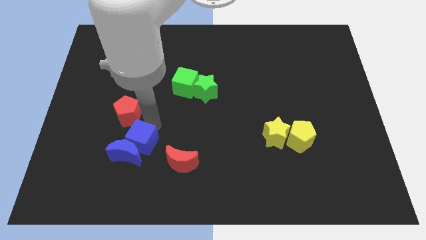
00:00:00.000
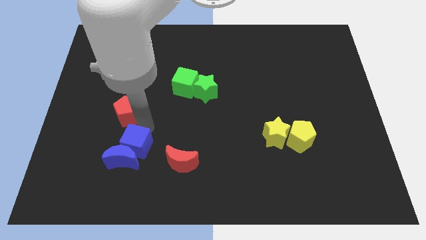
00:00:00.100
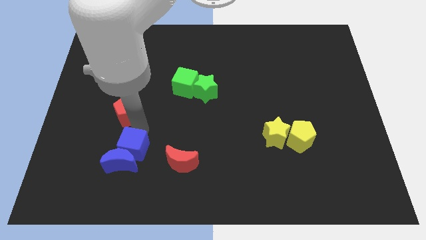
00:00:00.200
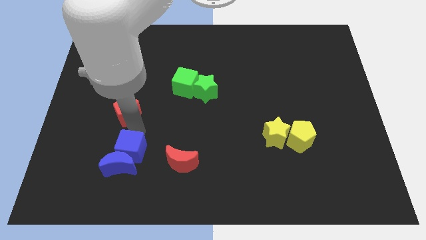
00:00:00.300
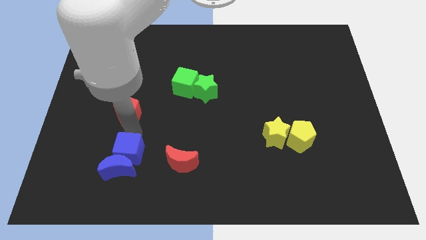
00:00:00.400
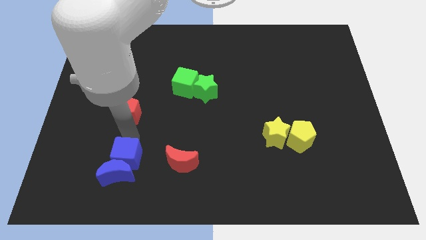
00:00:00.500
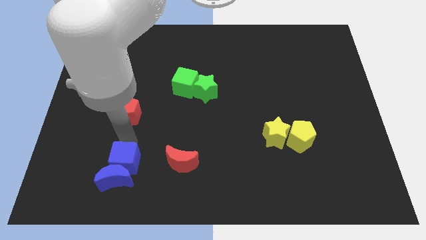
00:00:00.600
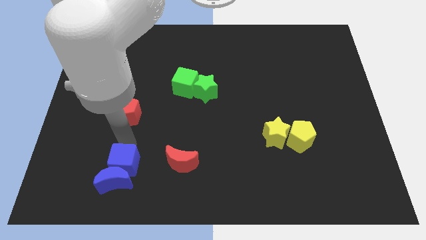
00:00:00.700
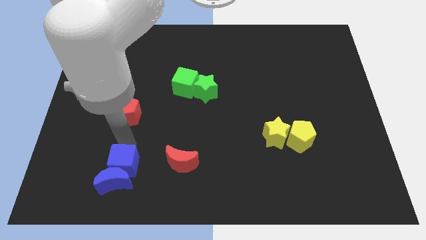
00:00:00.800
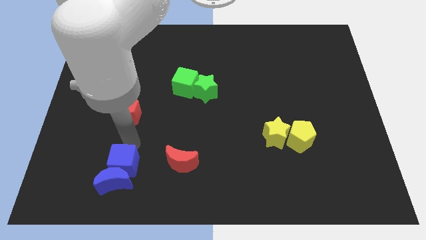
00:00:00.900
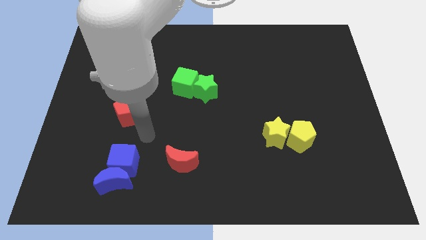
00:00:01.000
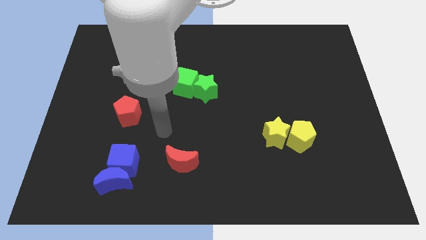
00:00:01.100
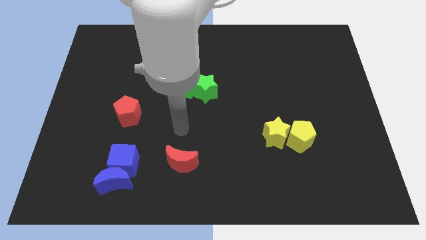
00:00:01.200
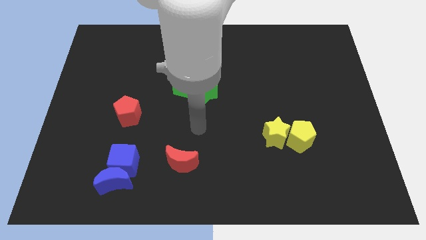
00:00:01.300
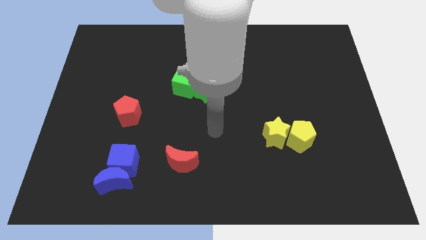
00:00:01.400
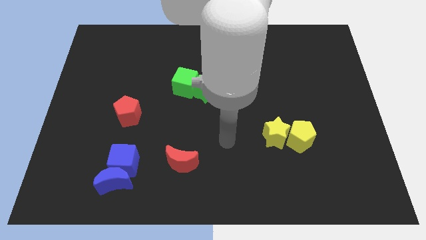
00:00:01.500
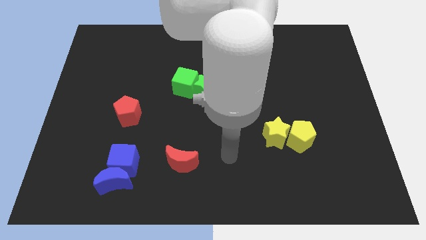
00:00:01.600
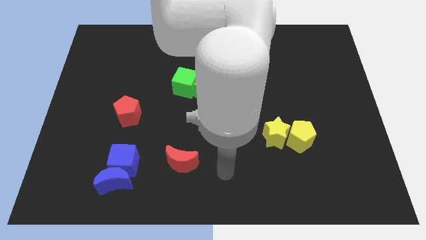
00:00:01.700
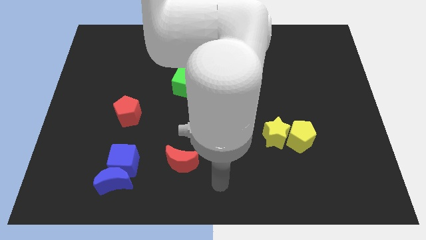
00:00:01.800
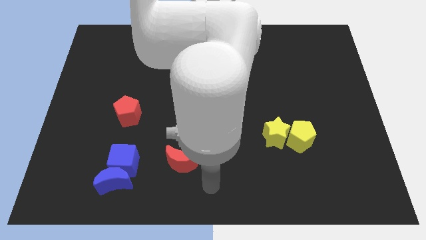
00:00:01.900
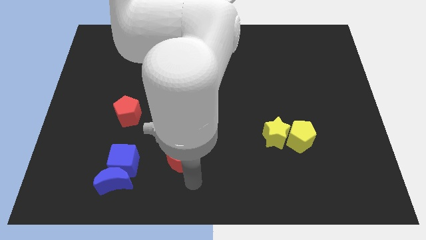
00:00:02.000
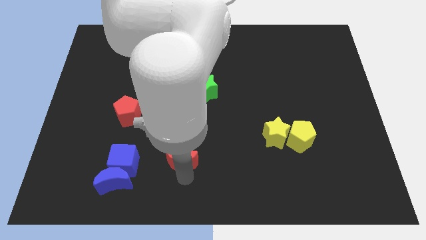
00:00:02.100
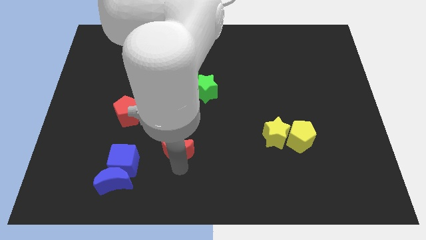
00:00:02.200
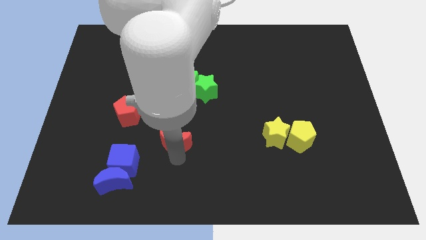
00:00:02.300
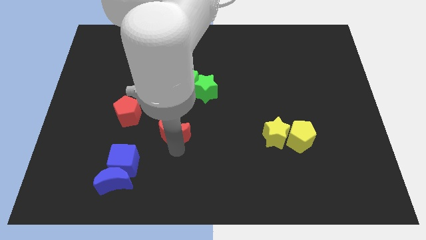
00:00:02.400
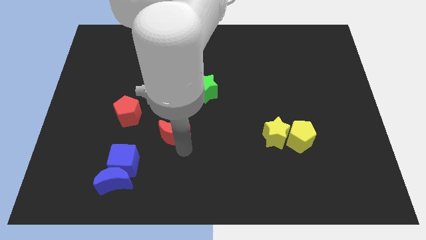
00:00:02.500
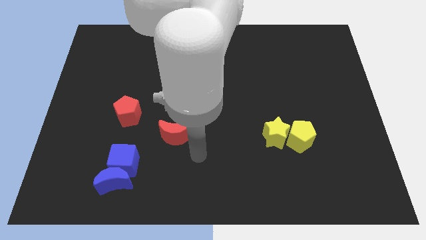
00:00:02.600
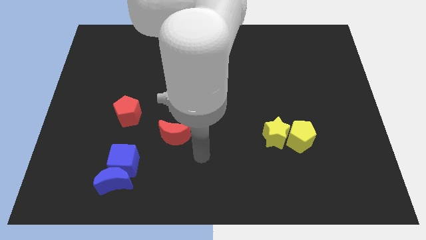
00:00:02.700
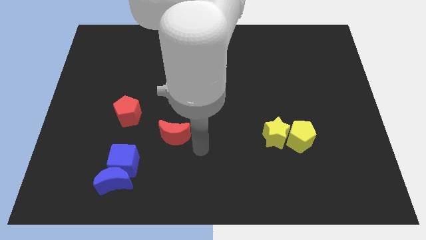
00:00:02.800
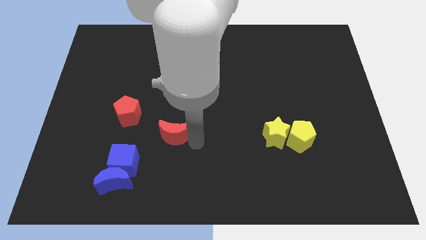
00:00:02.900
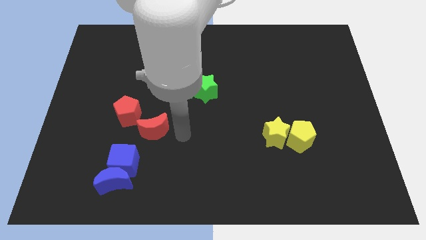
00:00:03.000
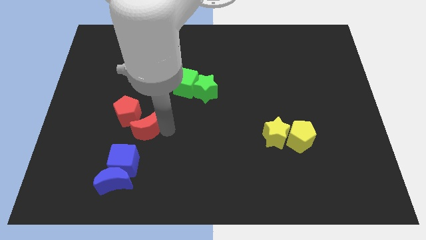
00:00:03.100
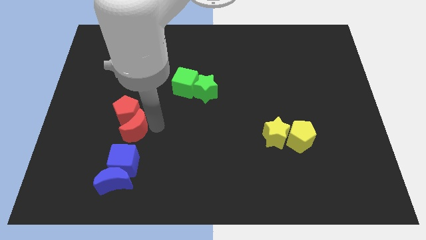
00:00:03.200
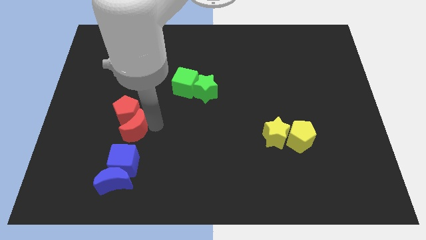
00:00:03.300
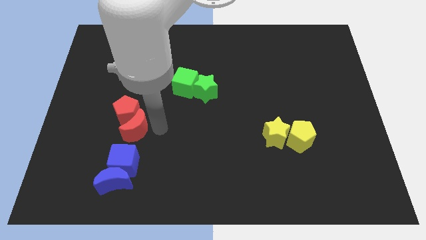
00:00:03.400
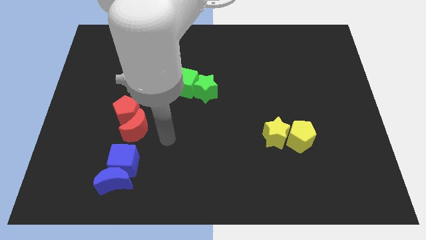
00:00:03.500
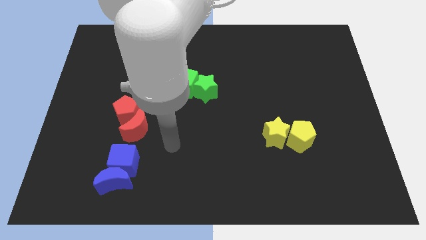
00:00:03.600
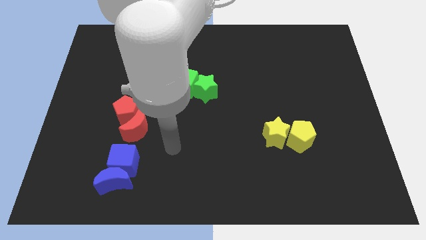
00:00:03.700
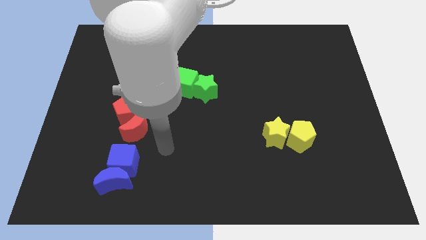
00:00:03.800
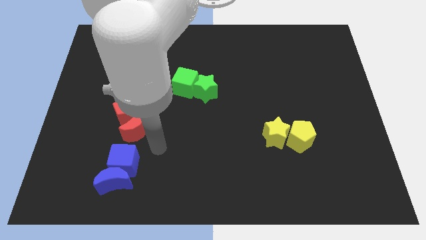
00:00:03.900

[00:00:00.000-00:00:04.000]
push the red moon diagonally bottom left of the green cube

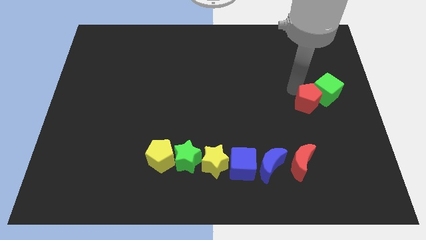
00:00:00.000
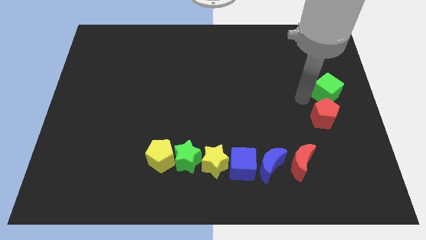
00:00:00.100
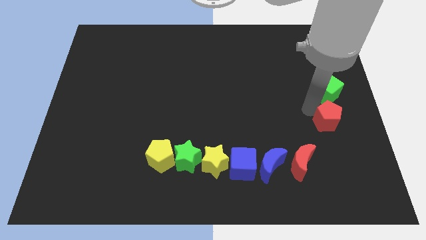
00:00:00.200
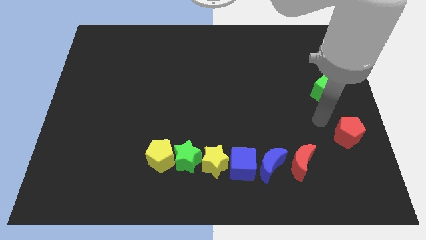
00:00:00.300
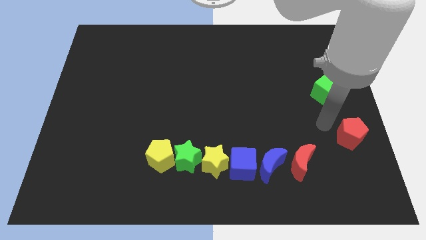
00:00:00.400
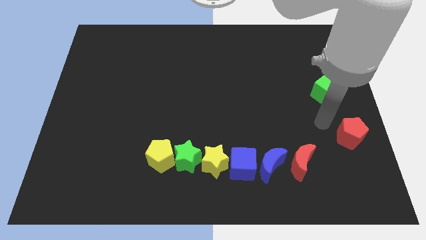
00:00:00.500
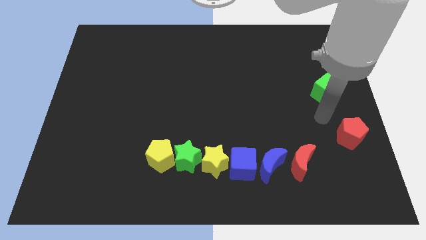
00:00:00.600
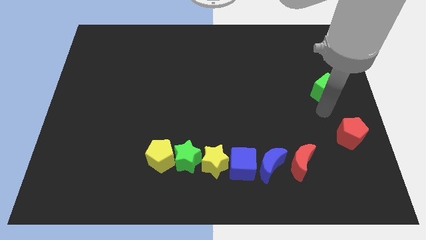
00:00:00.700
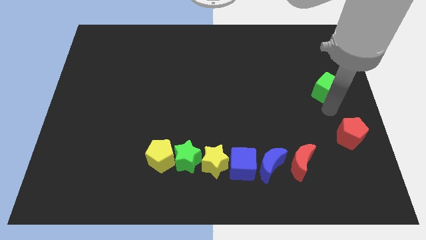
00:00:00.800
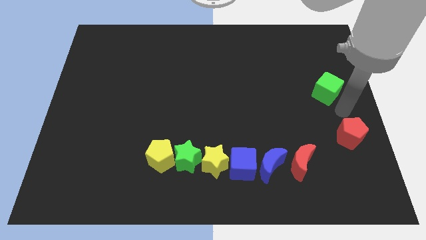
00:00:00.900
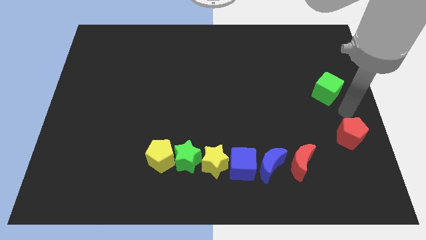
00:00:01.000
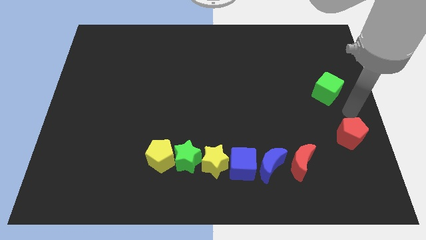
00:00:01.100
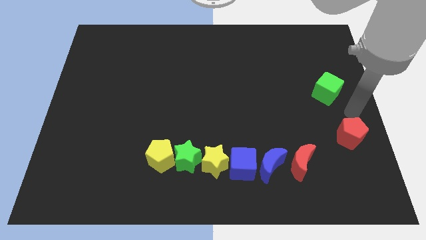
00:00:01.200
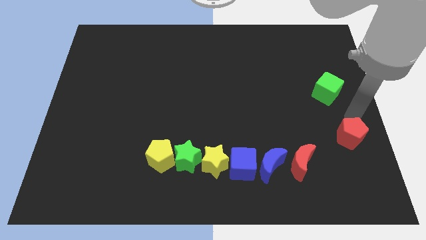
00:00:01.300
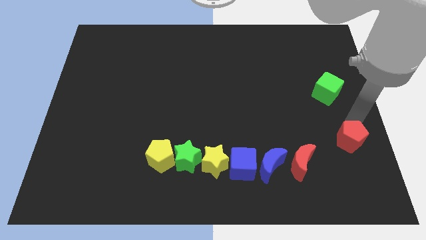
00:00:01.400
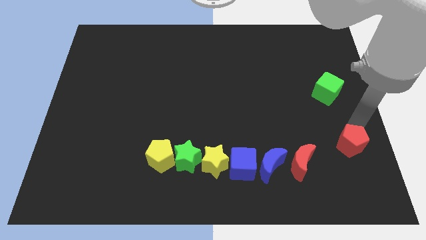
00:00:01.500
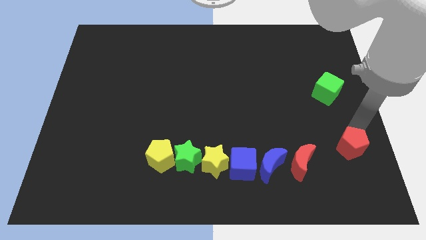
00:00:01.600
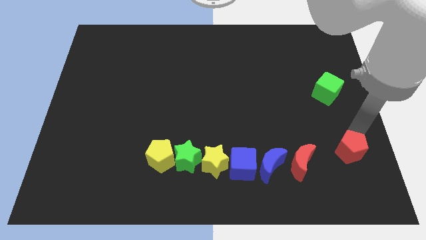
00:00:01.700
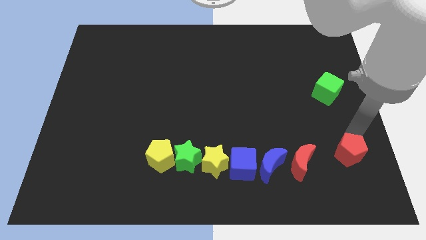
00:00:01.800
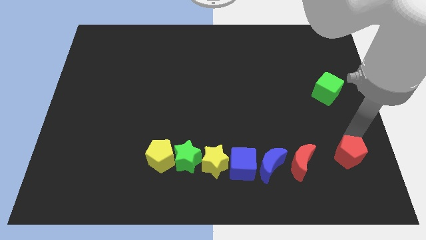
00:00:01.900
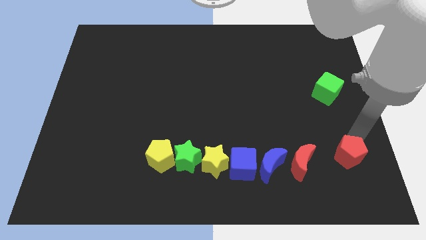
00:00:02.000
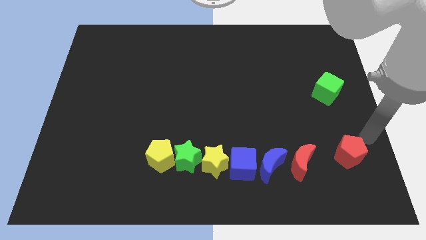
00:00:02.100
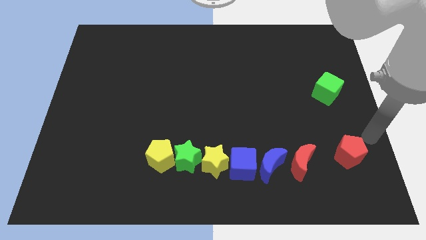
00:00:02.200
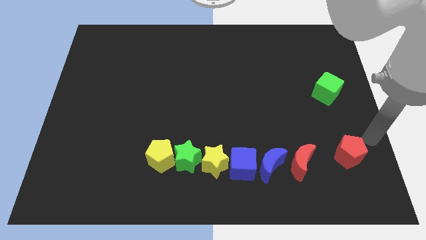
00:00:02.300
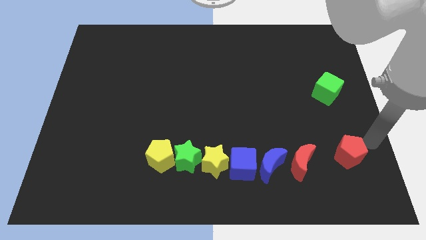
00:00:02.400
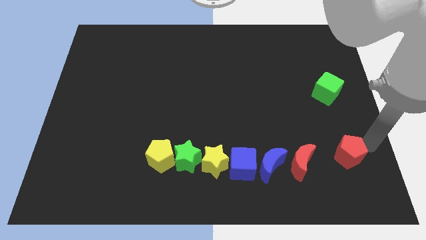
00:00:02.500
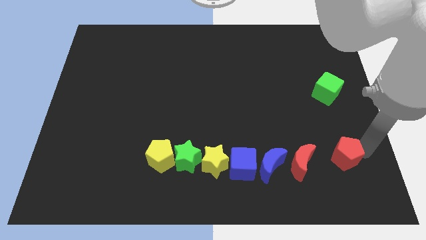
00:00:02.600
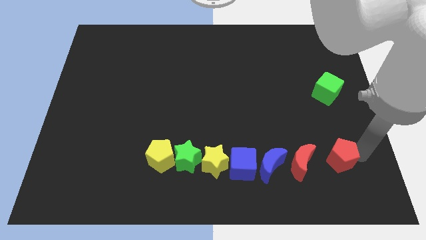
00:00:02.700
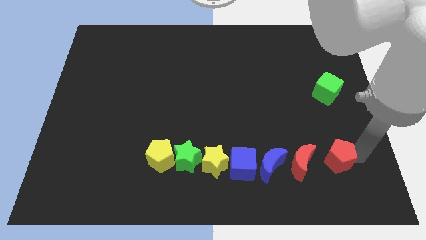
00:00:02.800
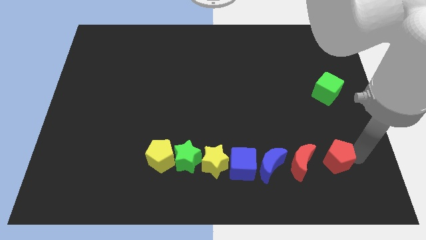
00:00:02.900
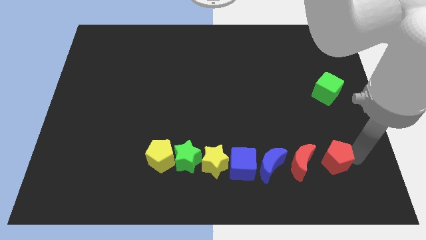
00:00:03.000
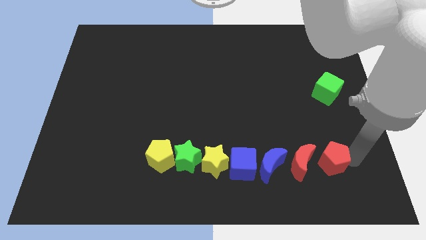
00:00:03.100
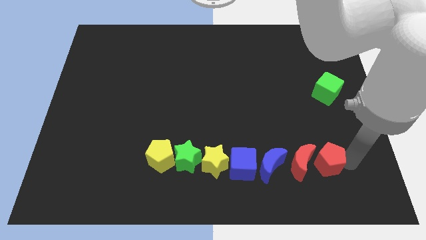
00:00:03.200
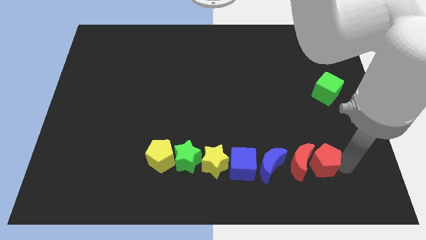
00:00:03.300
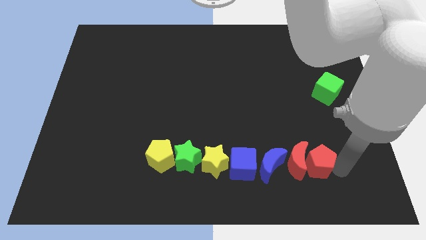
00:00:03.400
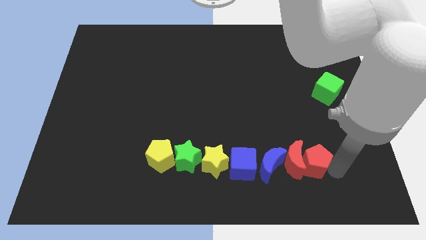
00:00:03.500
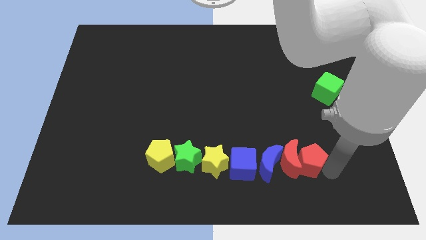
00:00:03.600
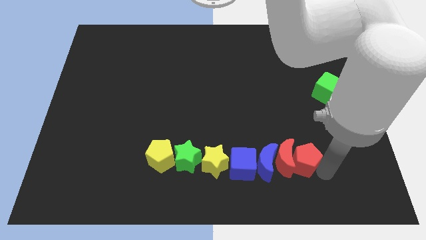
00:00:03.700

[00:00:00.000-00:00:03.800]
place red pentagon into the red crescent

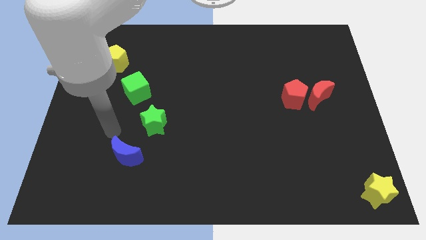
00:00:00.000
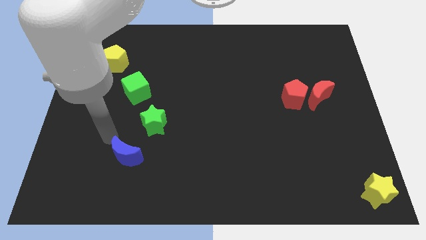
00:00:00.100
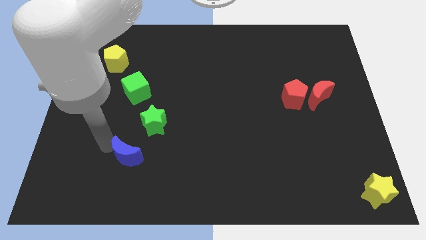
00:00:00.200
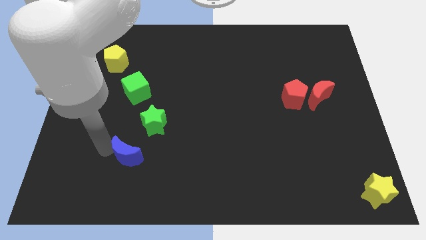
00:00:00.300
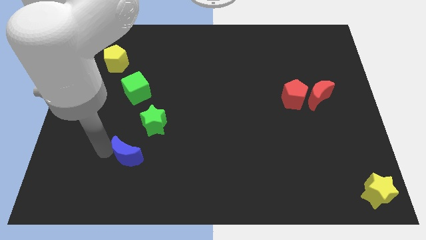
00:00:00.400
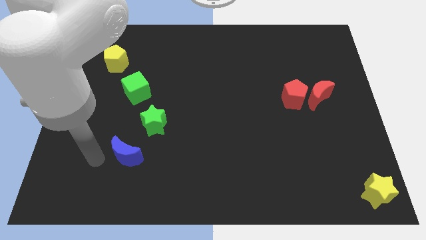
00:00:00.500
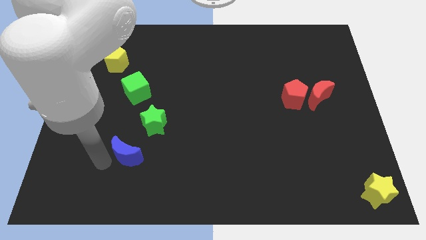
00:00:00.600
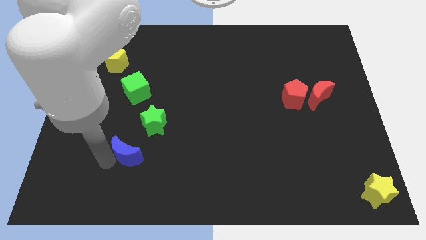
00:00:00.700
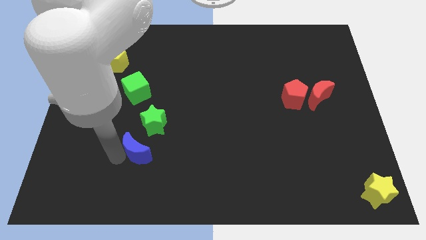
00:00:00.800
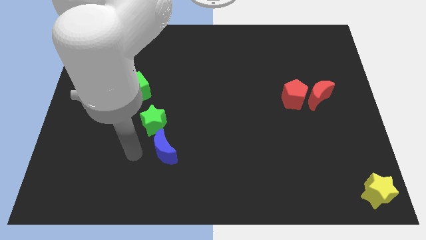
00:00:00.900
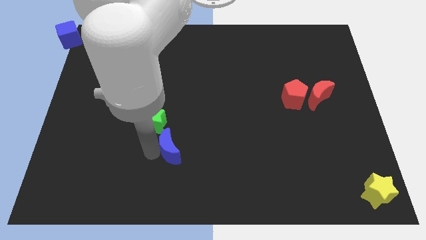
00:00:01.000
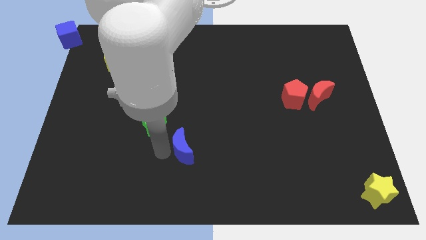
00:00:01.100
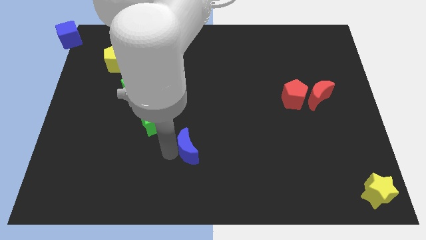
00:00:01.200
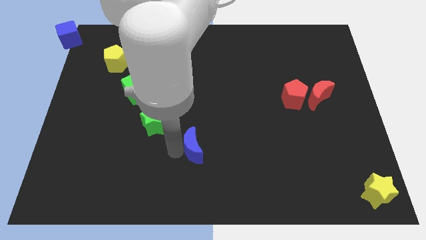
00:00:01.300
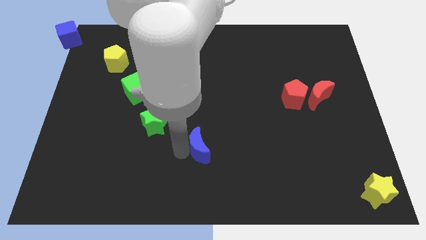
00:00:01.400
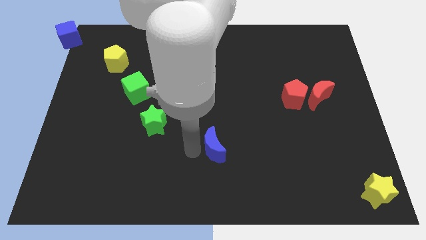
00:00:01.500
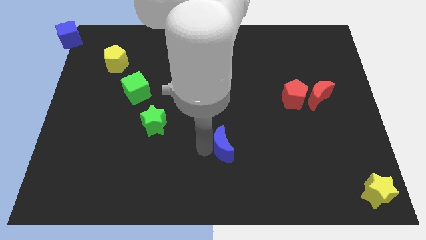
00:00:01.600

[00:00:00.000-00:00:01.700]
push the blue crescent to the right of the board
